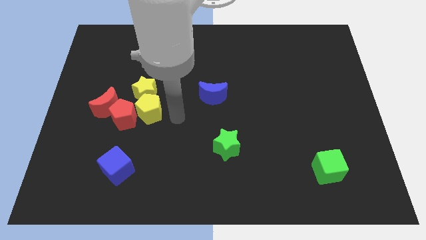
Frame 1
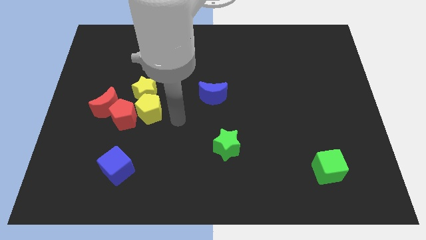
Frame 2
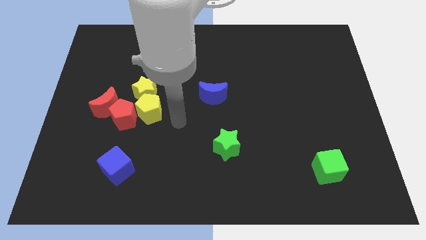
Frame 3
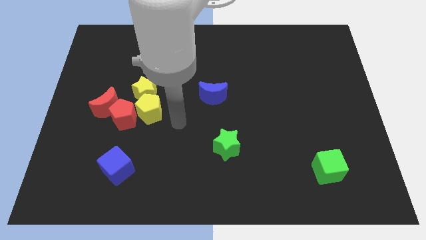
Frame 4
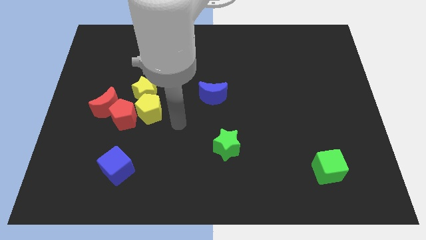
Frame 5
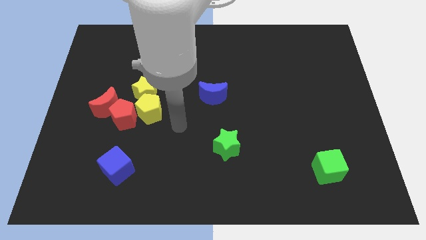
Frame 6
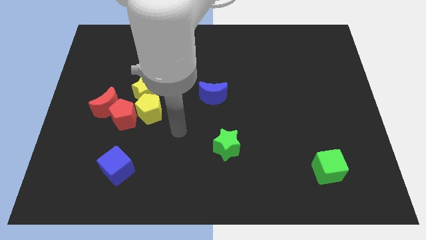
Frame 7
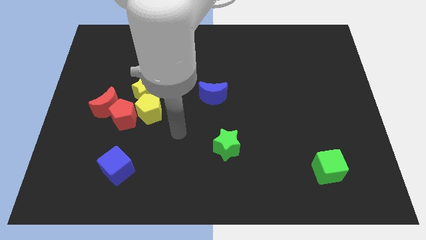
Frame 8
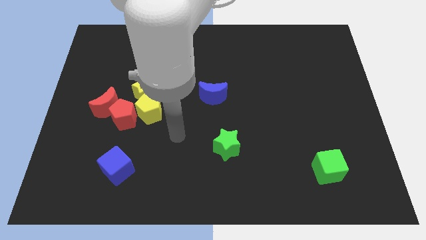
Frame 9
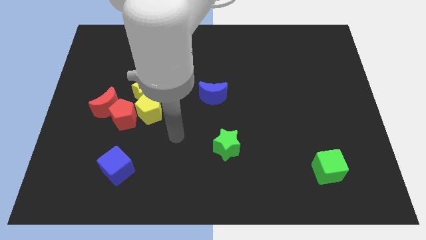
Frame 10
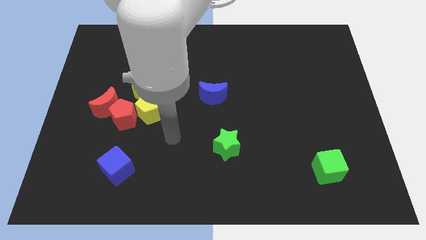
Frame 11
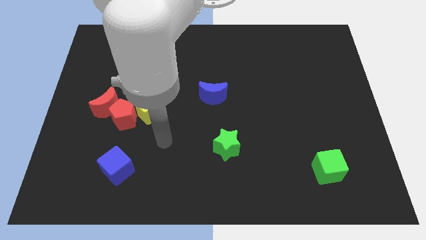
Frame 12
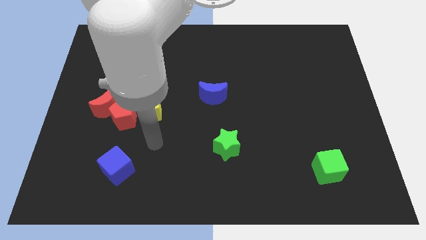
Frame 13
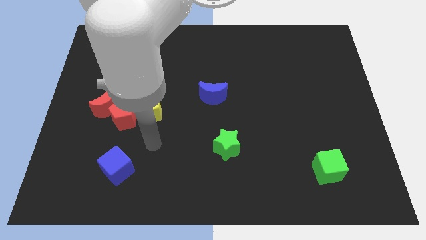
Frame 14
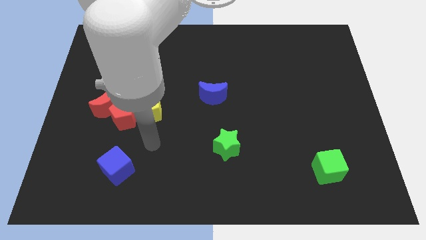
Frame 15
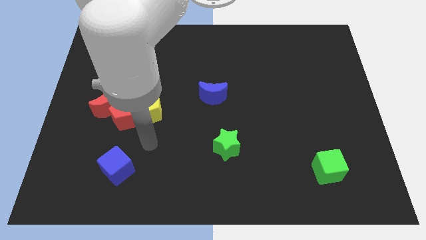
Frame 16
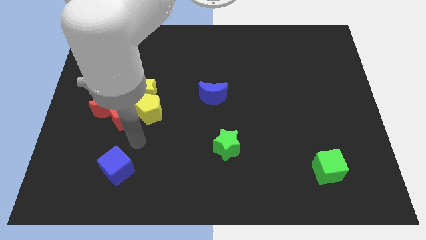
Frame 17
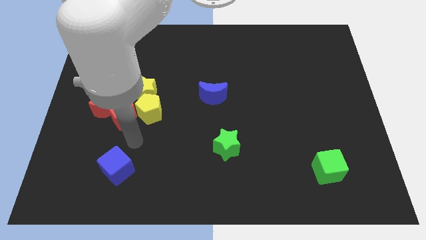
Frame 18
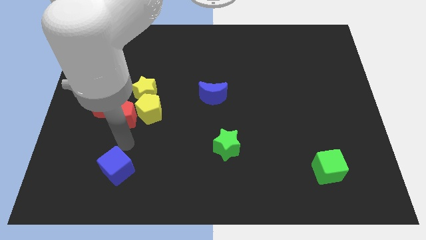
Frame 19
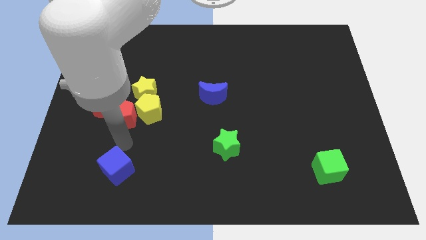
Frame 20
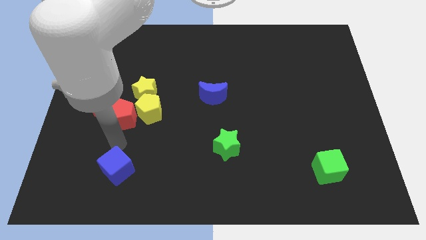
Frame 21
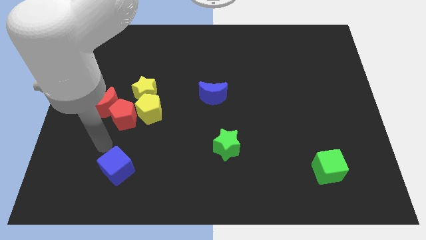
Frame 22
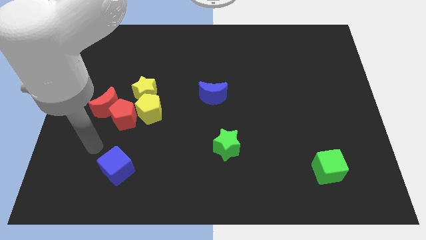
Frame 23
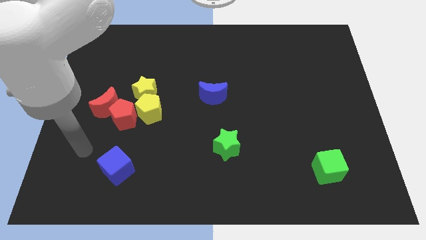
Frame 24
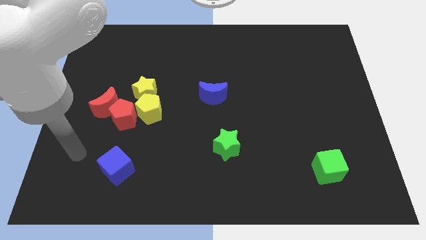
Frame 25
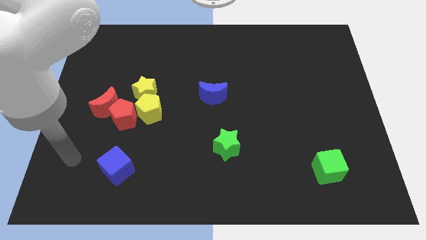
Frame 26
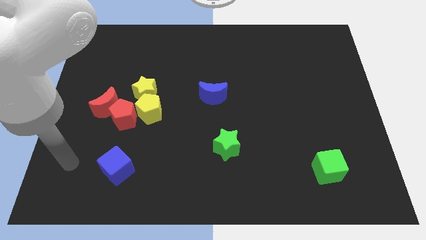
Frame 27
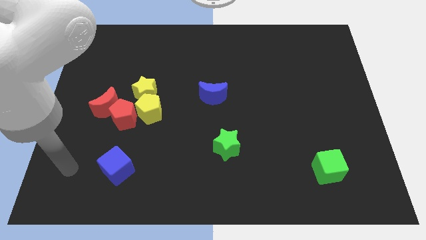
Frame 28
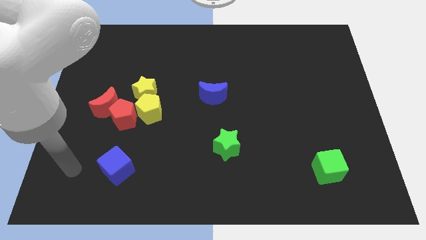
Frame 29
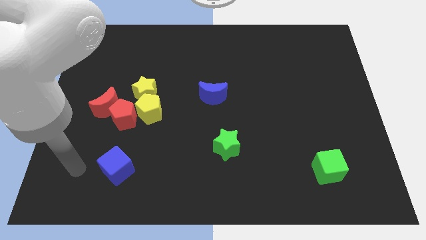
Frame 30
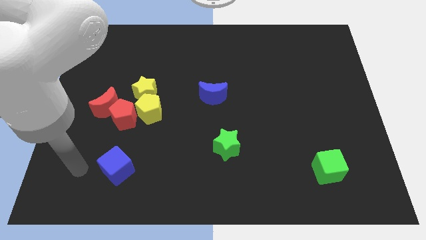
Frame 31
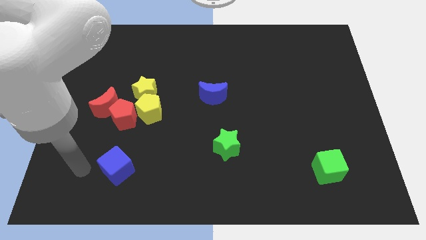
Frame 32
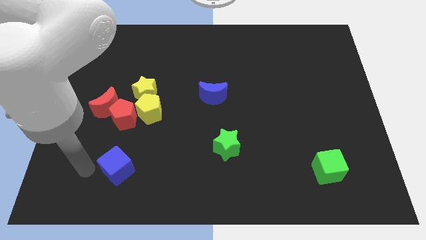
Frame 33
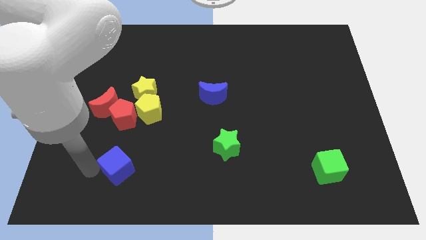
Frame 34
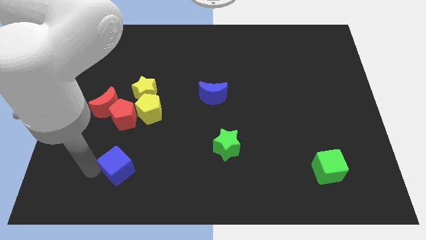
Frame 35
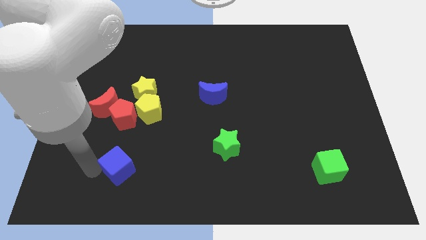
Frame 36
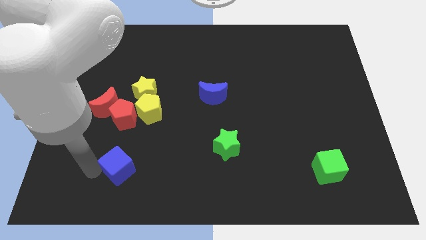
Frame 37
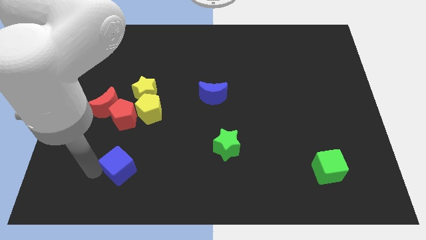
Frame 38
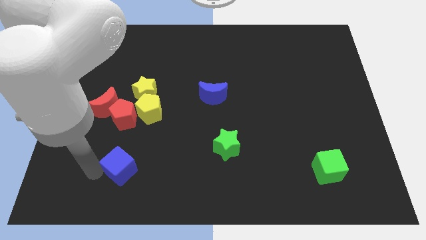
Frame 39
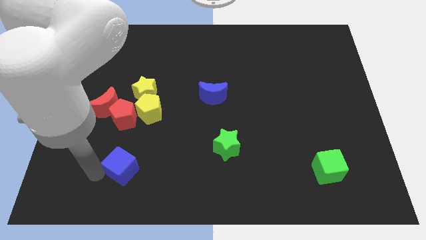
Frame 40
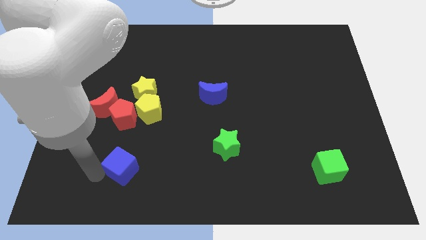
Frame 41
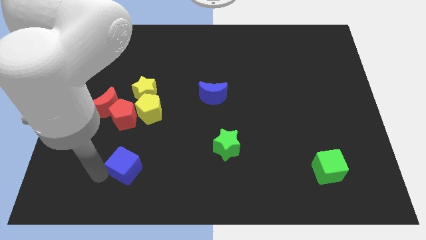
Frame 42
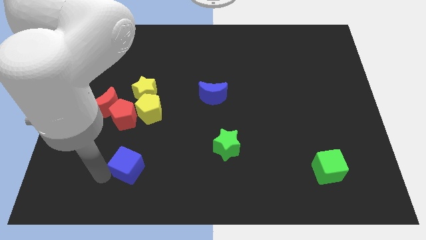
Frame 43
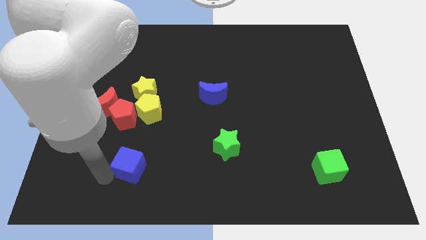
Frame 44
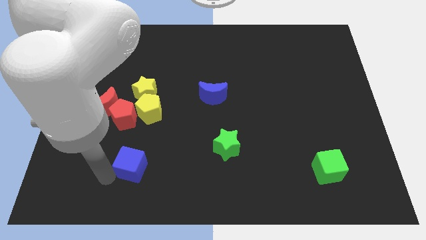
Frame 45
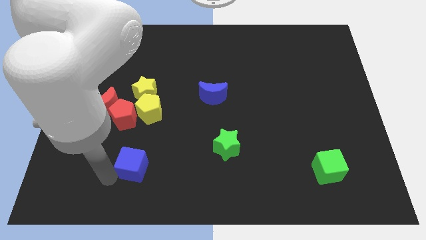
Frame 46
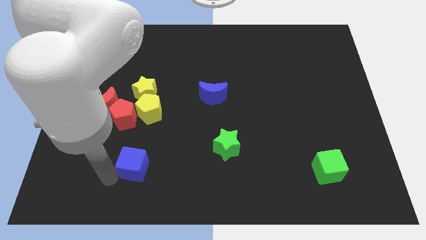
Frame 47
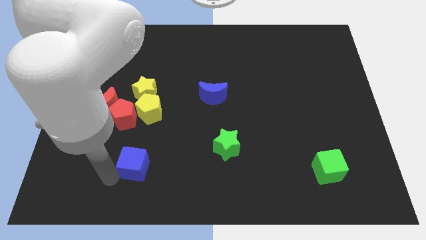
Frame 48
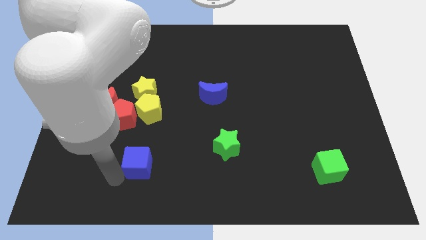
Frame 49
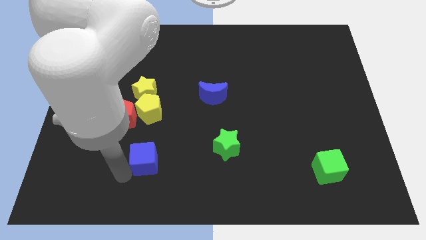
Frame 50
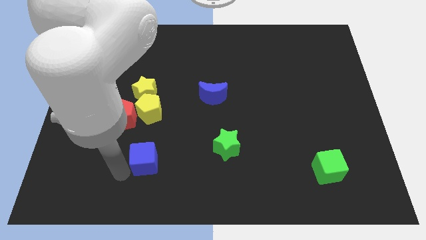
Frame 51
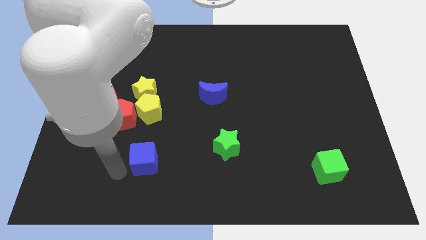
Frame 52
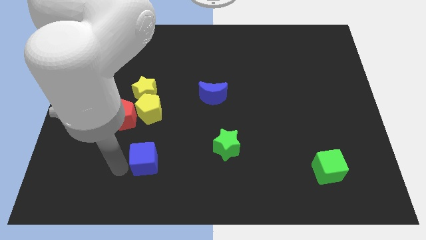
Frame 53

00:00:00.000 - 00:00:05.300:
move the blue cube to the right of the board

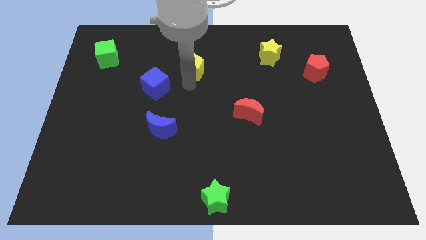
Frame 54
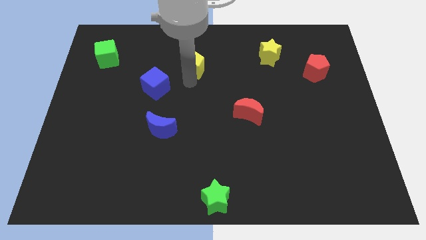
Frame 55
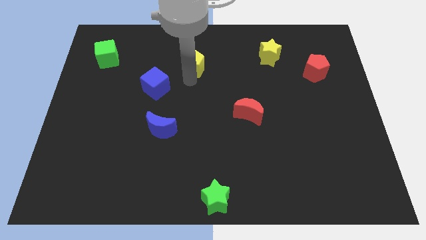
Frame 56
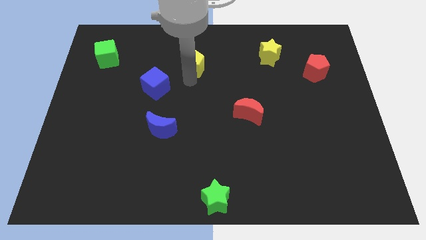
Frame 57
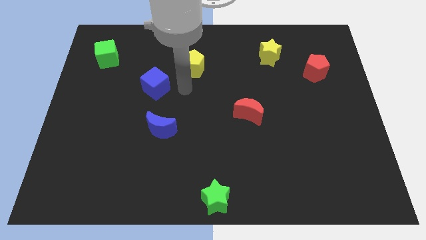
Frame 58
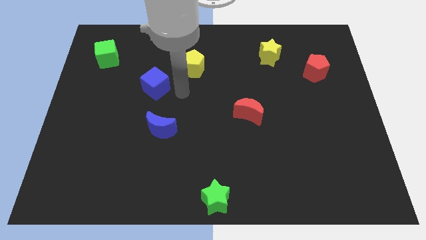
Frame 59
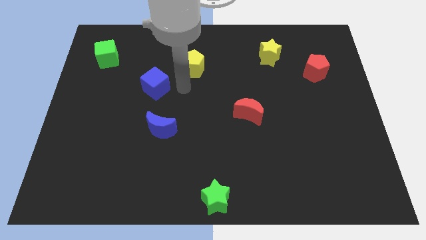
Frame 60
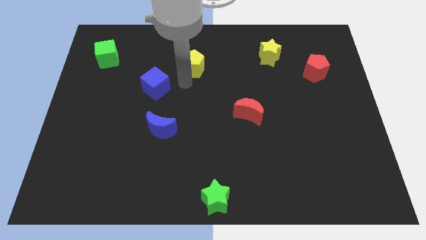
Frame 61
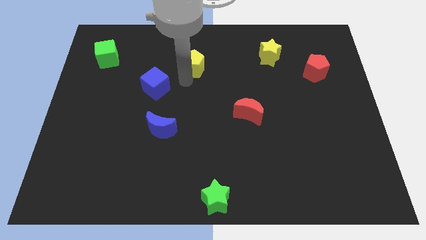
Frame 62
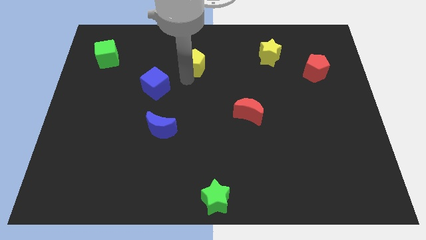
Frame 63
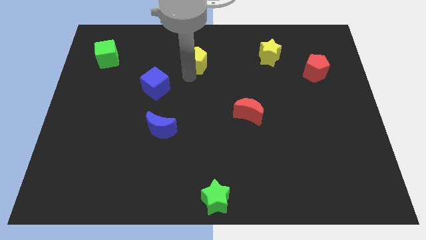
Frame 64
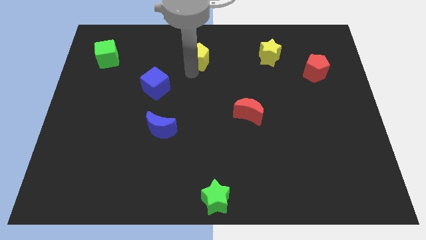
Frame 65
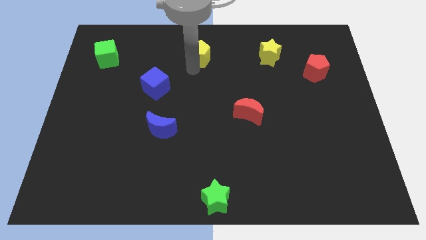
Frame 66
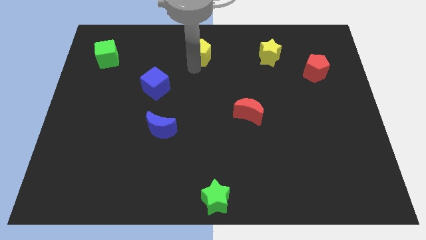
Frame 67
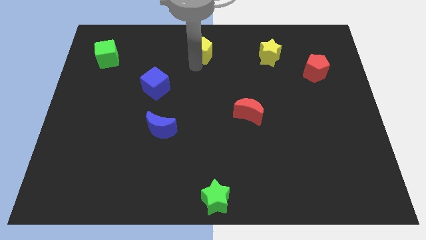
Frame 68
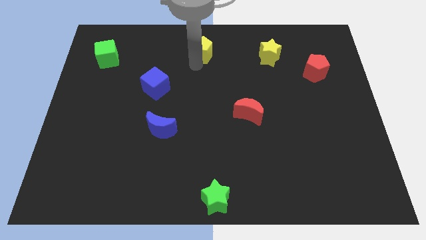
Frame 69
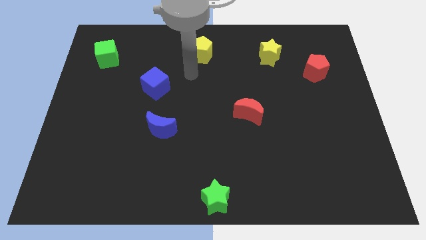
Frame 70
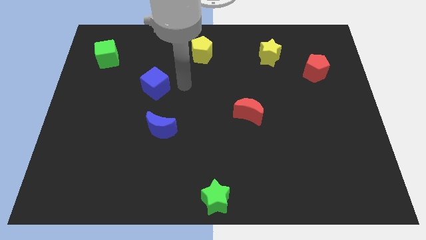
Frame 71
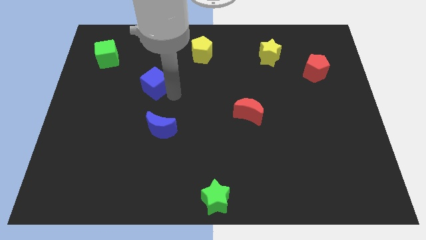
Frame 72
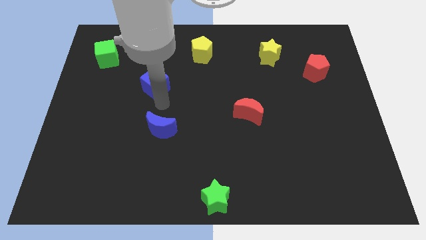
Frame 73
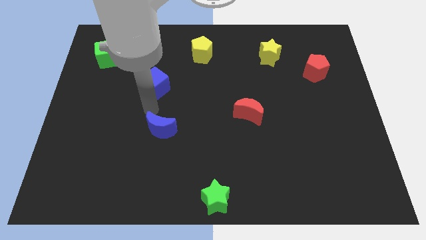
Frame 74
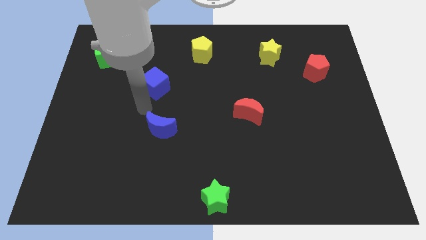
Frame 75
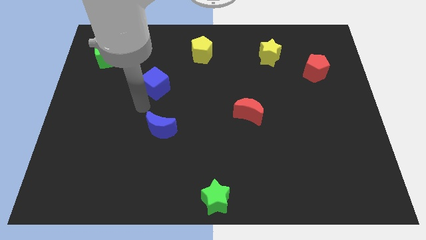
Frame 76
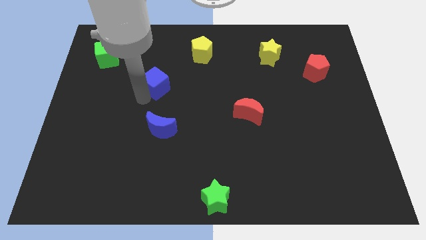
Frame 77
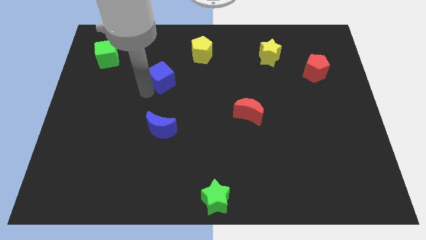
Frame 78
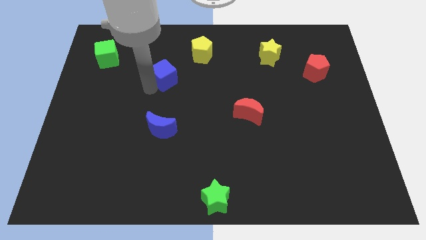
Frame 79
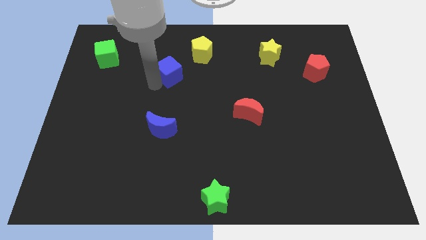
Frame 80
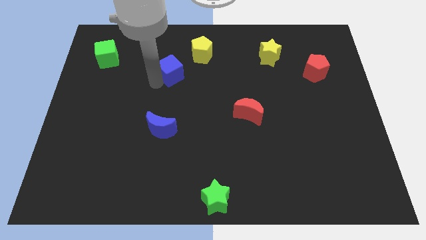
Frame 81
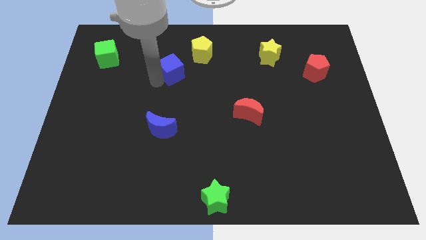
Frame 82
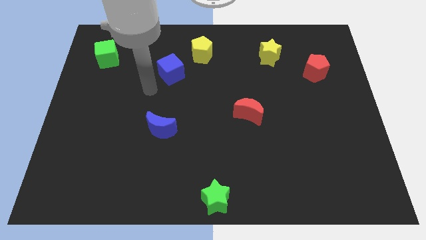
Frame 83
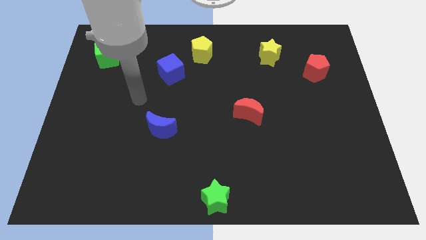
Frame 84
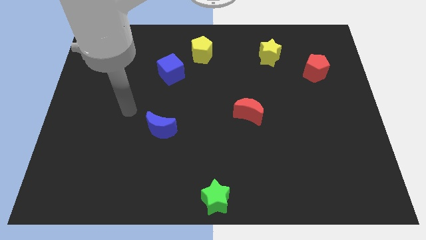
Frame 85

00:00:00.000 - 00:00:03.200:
place the blue cube diagonally bottom left to the yellow pentagon

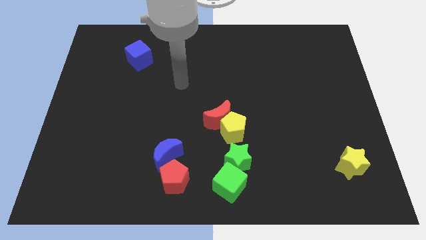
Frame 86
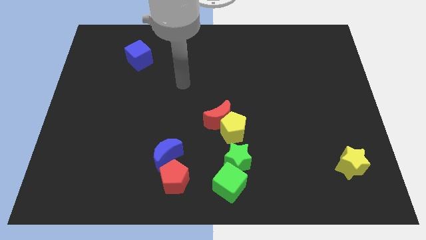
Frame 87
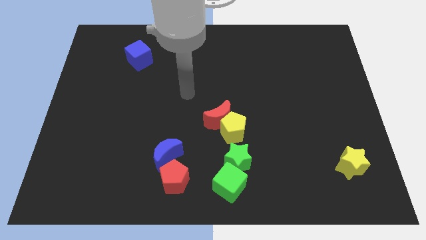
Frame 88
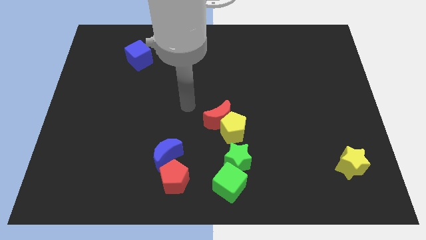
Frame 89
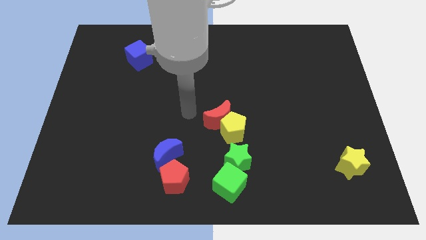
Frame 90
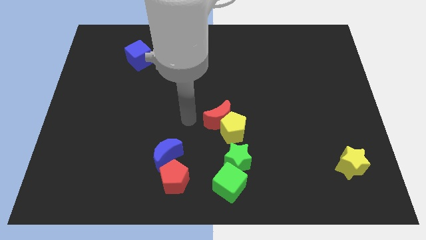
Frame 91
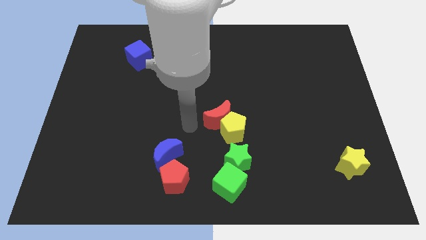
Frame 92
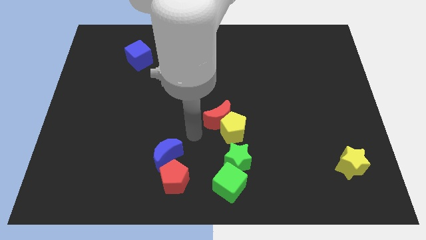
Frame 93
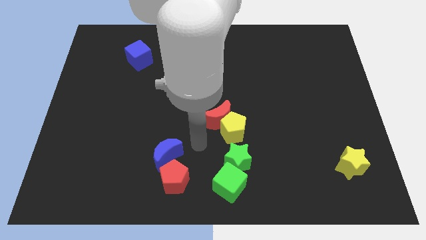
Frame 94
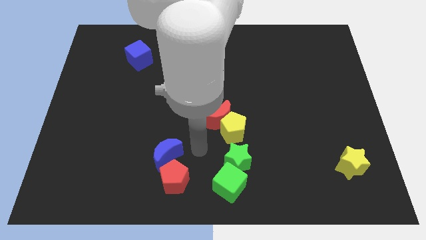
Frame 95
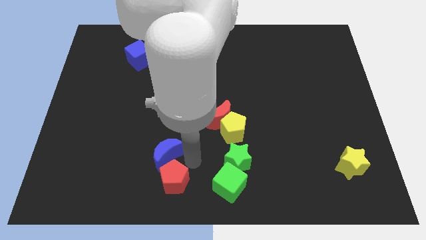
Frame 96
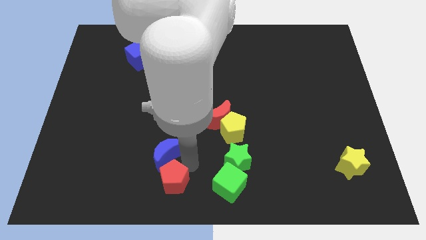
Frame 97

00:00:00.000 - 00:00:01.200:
move your hand towards the right of the red pentagon
